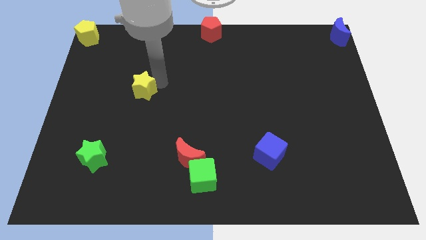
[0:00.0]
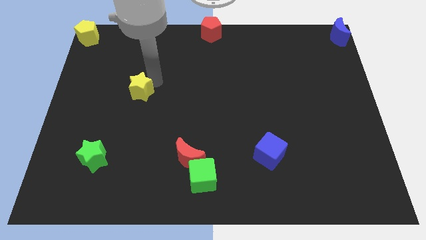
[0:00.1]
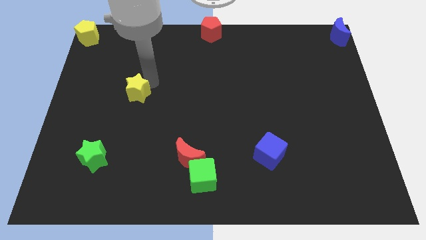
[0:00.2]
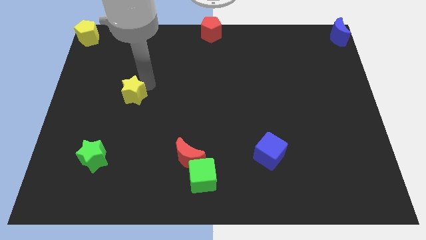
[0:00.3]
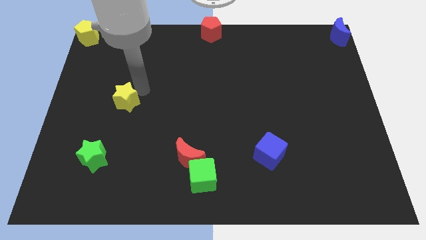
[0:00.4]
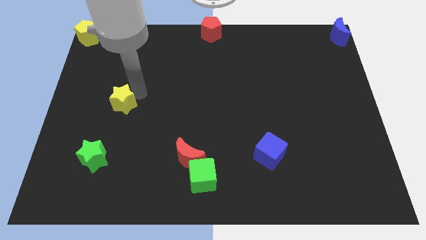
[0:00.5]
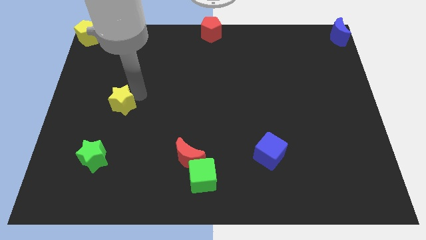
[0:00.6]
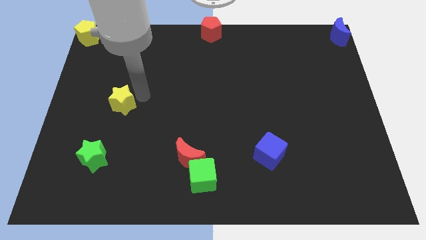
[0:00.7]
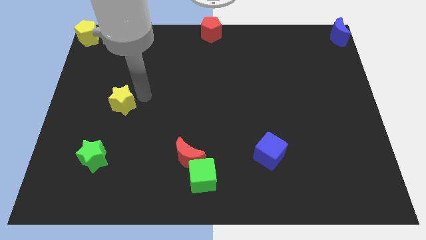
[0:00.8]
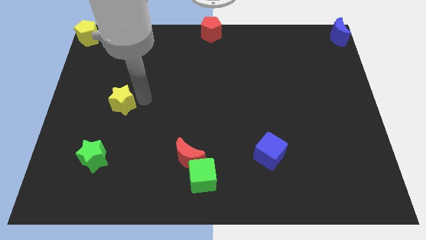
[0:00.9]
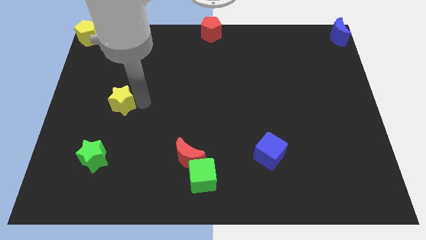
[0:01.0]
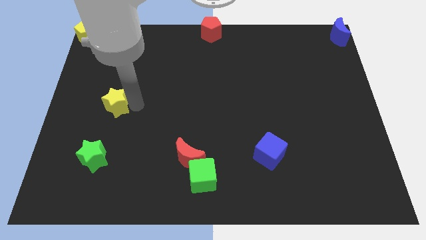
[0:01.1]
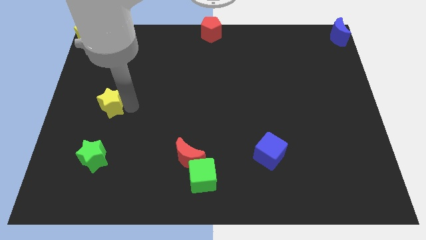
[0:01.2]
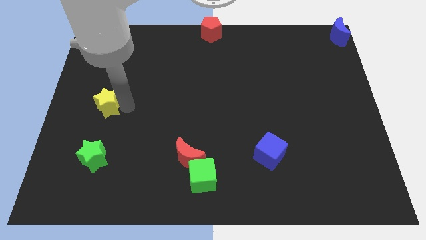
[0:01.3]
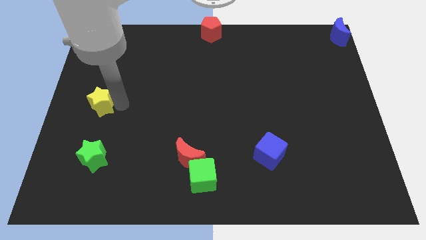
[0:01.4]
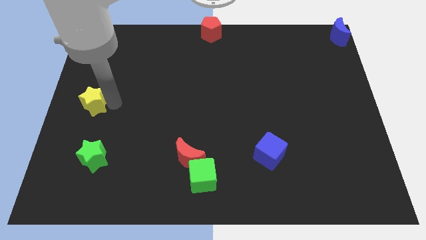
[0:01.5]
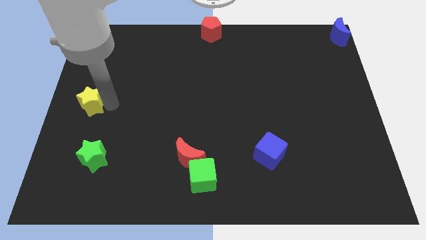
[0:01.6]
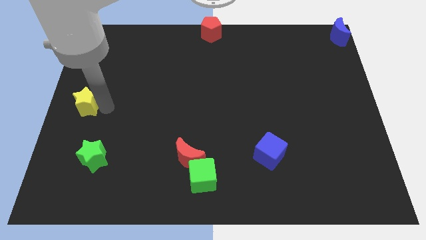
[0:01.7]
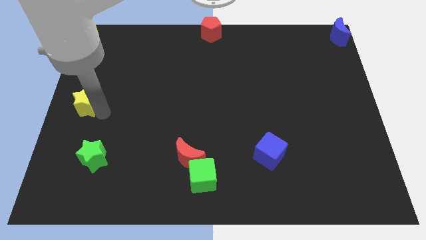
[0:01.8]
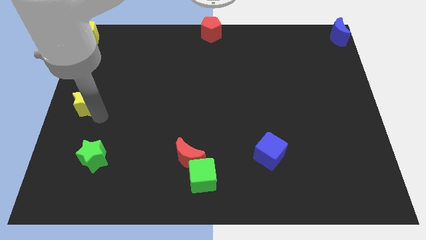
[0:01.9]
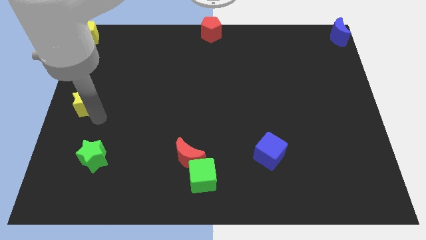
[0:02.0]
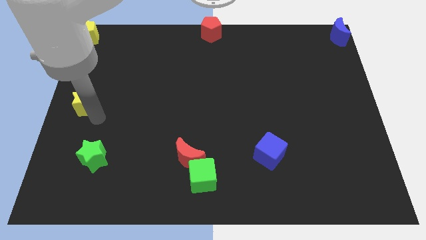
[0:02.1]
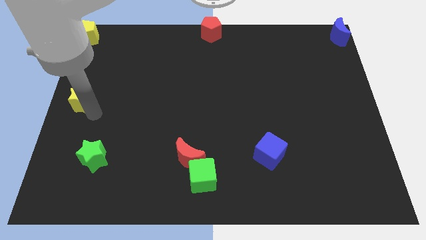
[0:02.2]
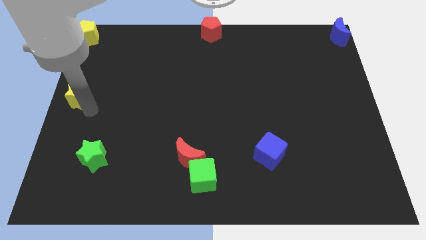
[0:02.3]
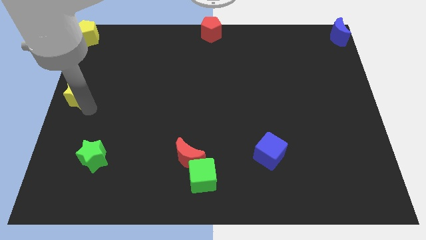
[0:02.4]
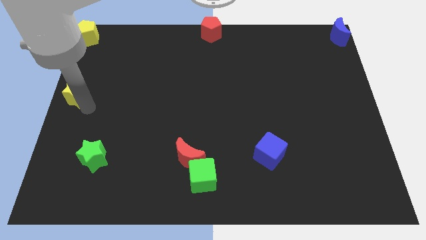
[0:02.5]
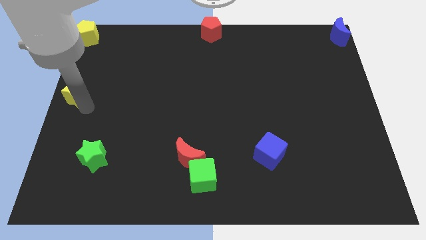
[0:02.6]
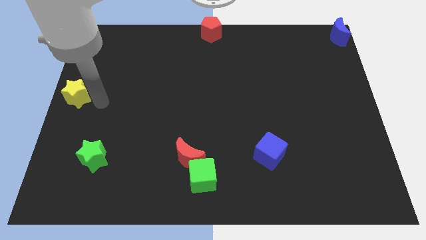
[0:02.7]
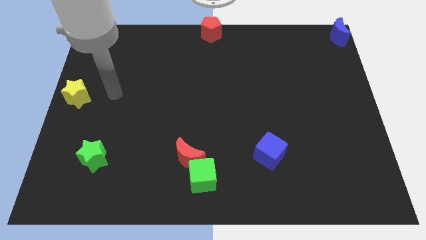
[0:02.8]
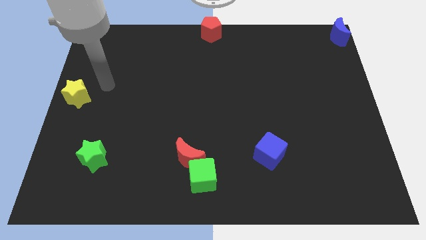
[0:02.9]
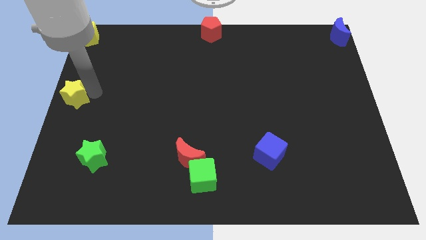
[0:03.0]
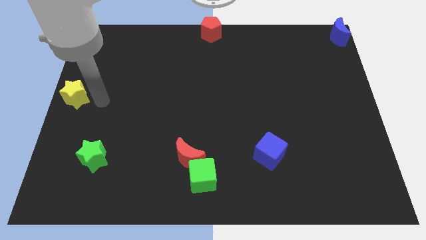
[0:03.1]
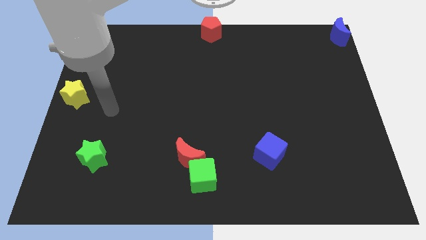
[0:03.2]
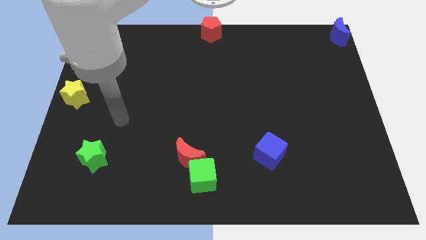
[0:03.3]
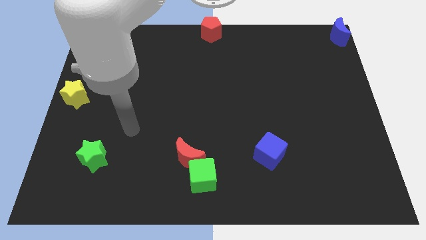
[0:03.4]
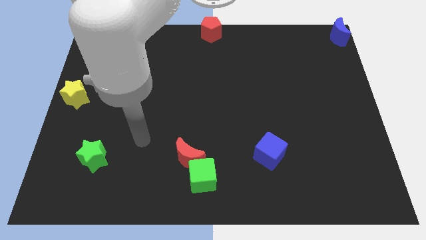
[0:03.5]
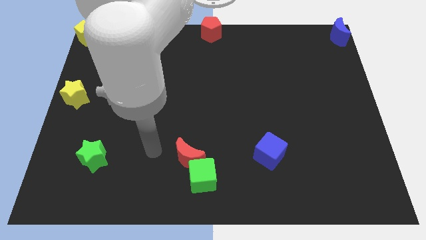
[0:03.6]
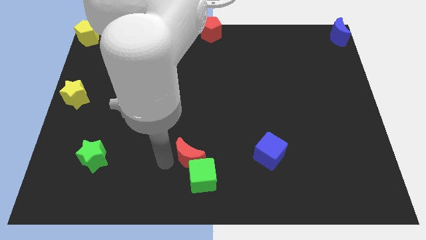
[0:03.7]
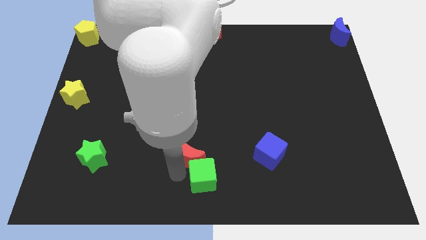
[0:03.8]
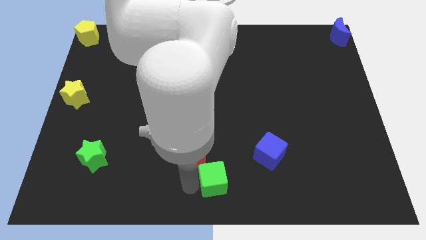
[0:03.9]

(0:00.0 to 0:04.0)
push the yellow star vertically below the yellow pentagon

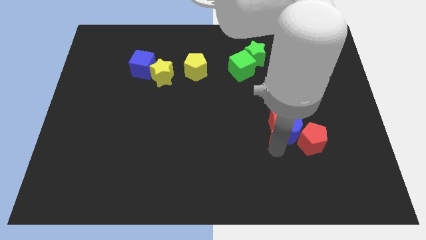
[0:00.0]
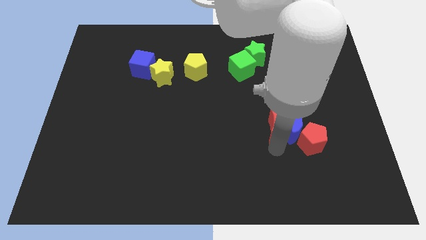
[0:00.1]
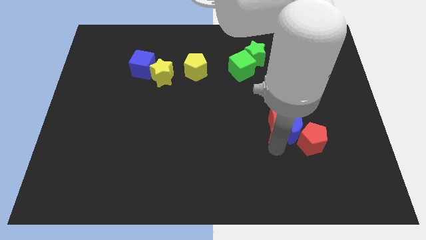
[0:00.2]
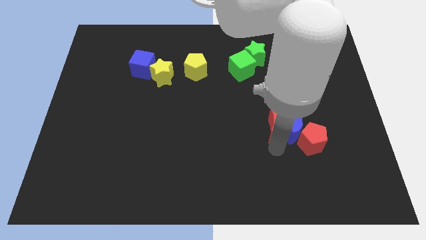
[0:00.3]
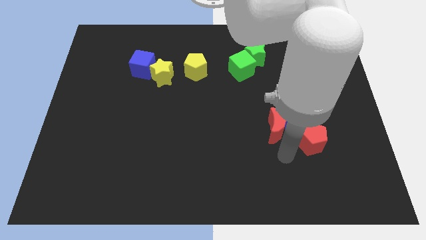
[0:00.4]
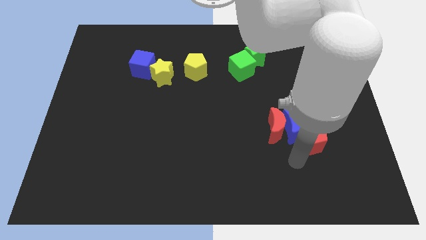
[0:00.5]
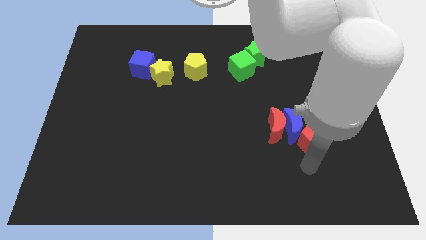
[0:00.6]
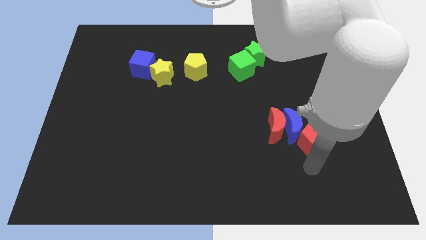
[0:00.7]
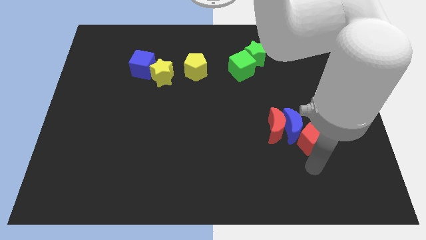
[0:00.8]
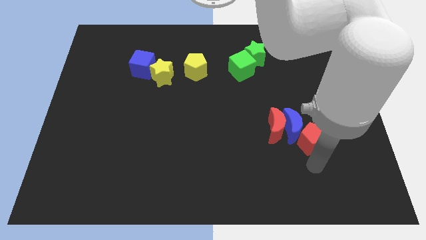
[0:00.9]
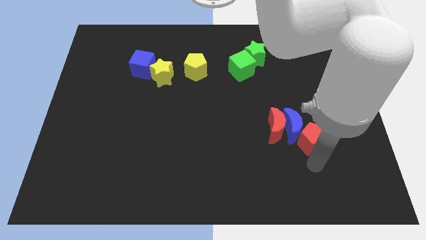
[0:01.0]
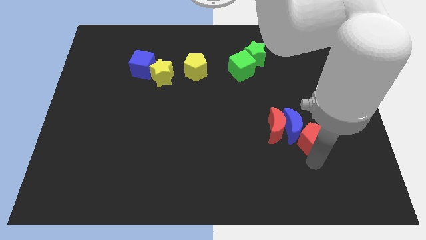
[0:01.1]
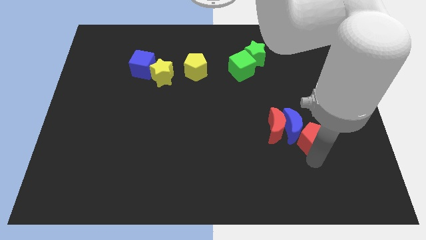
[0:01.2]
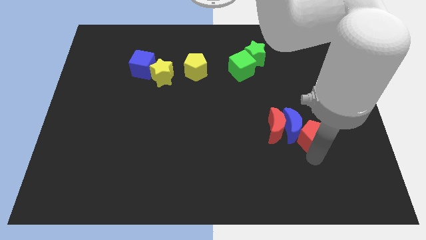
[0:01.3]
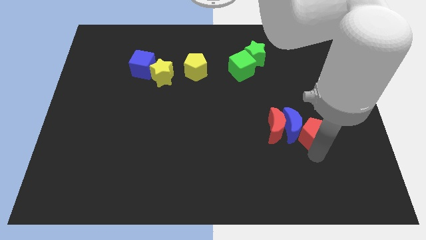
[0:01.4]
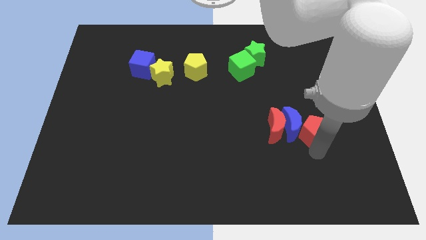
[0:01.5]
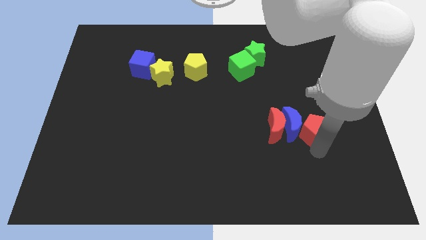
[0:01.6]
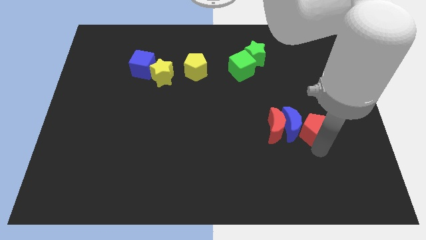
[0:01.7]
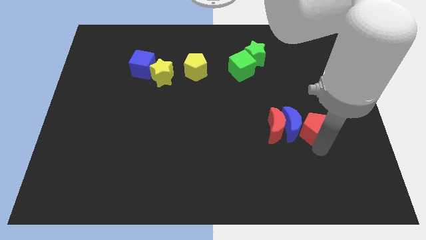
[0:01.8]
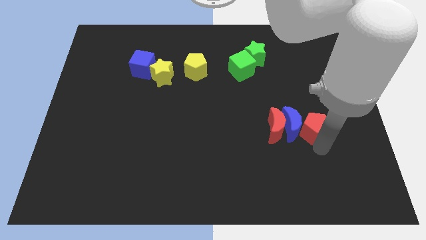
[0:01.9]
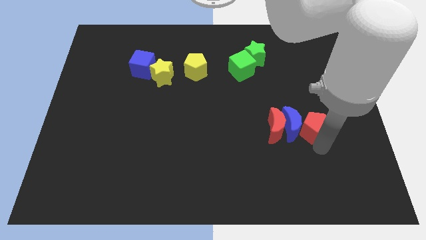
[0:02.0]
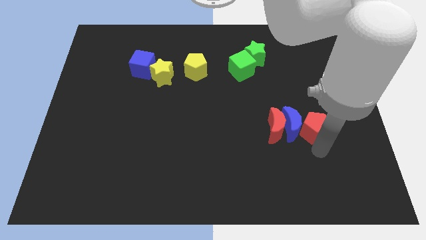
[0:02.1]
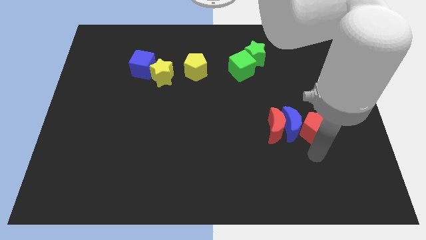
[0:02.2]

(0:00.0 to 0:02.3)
place the red pentagon close to the blue moon

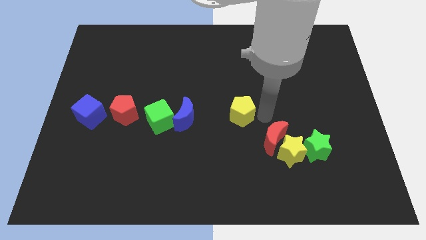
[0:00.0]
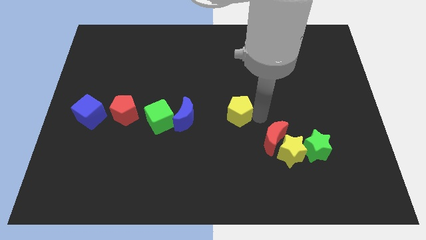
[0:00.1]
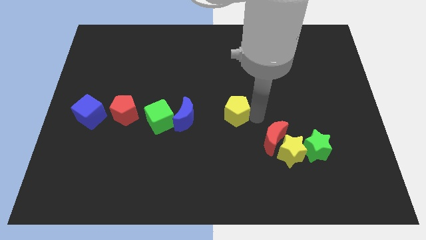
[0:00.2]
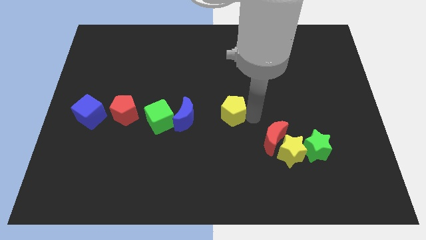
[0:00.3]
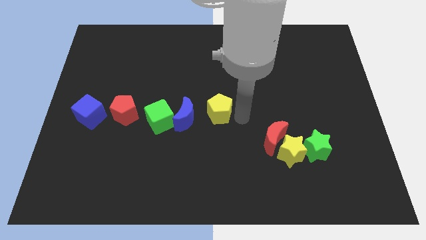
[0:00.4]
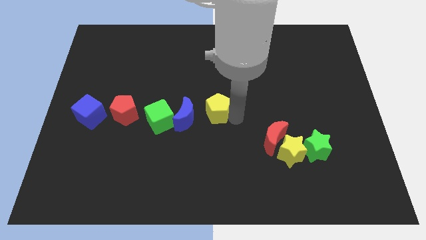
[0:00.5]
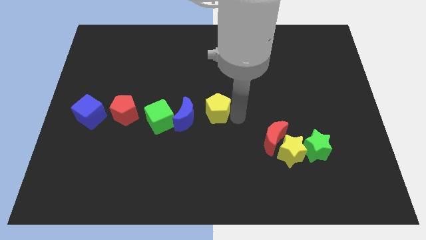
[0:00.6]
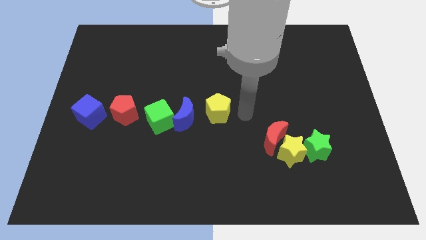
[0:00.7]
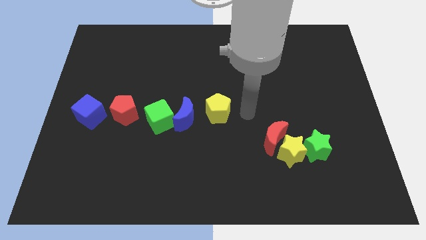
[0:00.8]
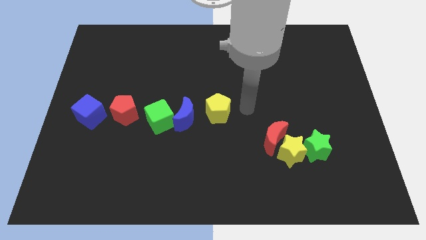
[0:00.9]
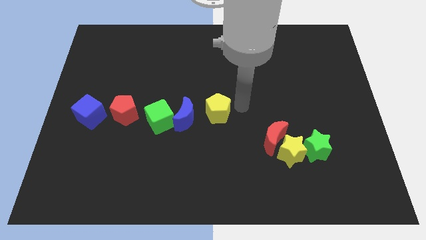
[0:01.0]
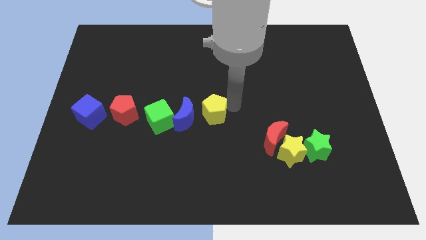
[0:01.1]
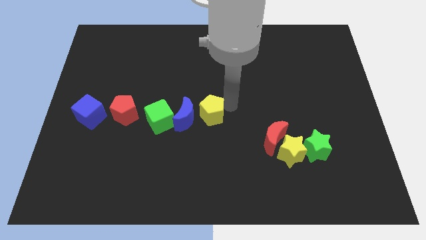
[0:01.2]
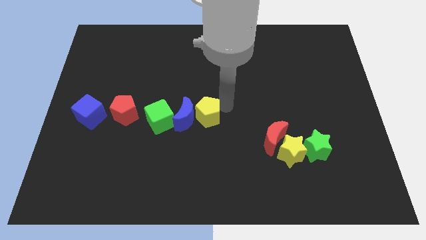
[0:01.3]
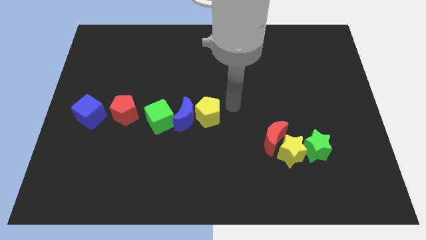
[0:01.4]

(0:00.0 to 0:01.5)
place the yellow pentagon to the right side of the blue crescent

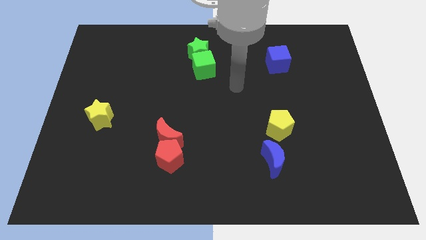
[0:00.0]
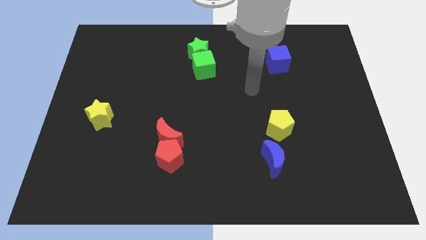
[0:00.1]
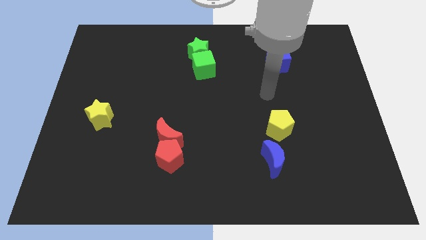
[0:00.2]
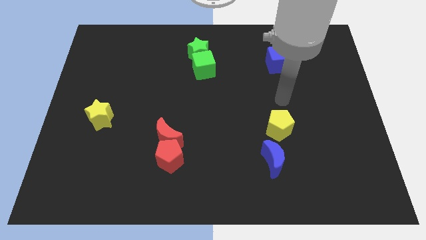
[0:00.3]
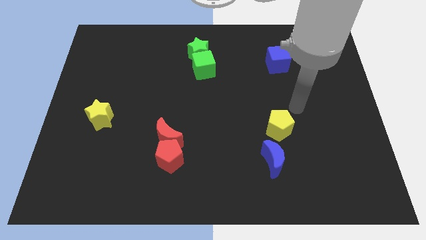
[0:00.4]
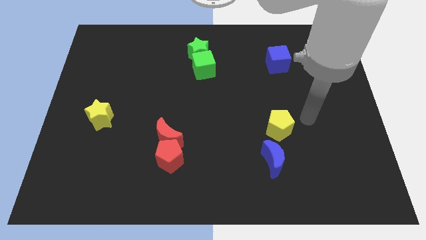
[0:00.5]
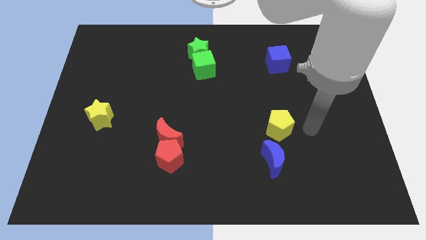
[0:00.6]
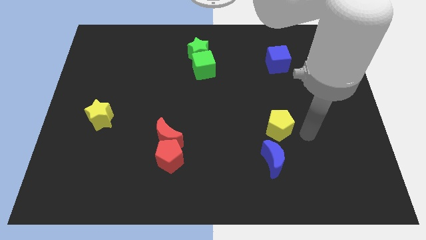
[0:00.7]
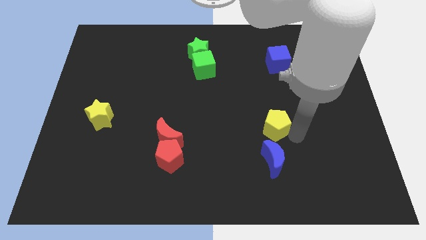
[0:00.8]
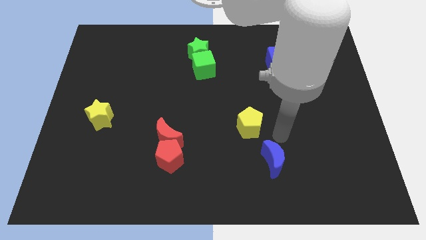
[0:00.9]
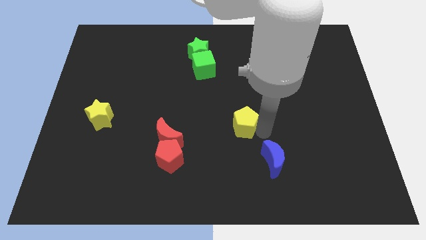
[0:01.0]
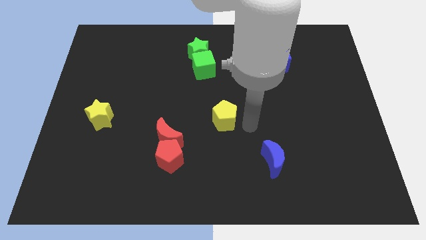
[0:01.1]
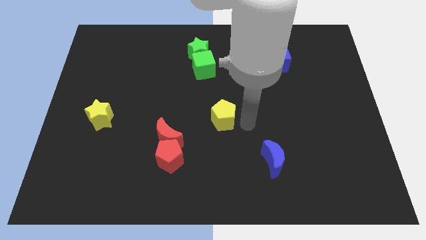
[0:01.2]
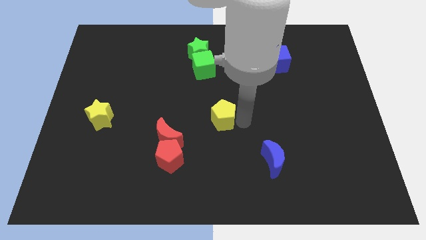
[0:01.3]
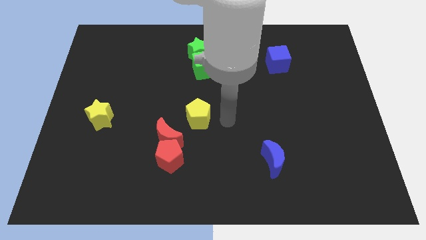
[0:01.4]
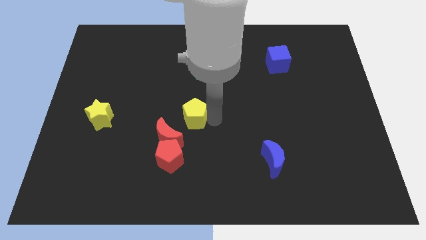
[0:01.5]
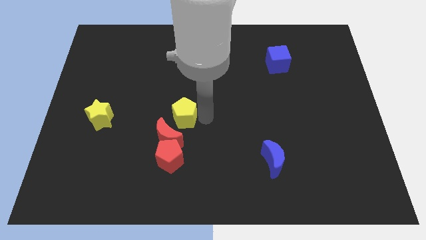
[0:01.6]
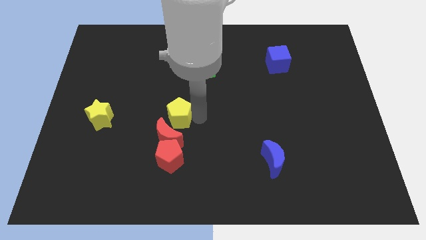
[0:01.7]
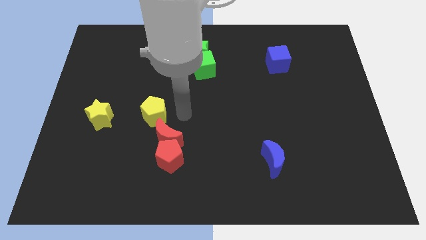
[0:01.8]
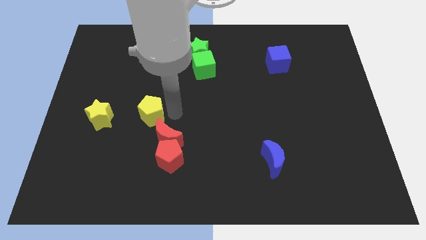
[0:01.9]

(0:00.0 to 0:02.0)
push the yellow penatgon close to yellow star
